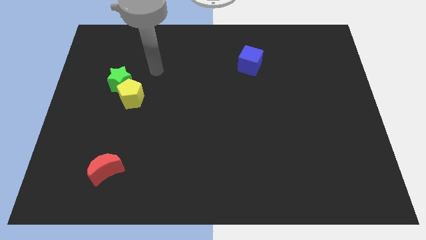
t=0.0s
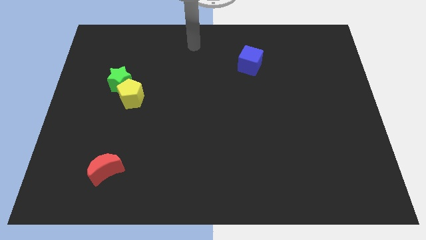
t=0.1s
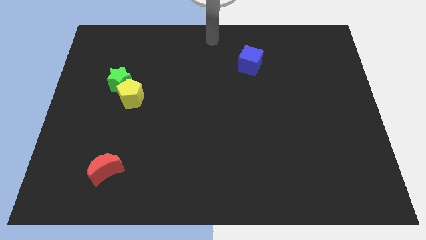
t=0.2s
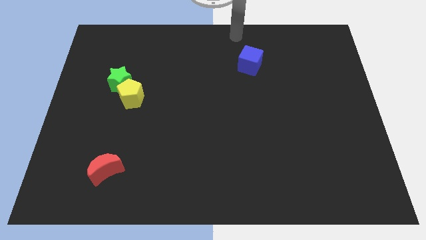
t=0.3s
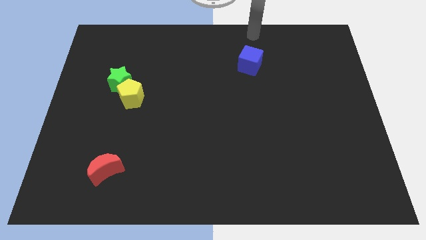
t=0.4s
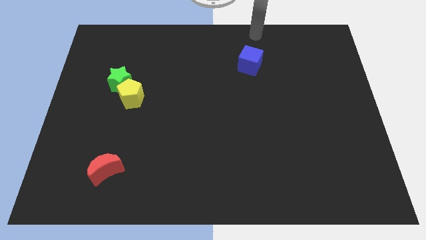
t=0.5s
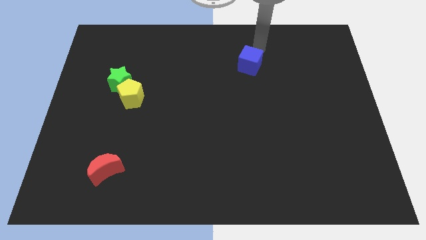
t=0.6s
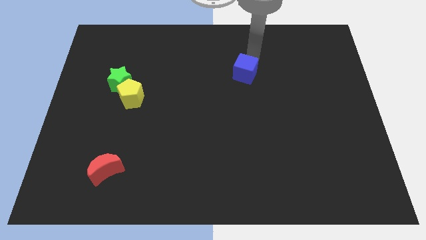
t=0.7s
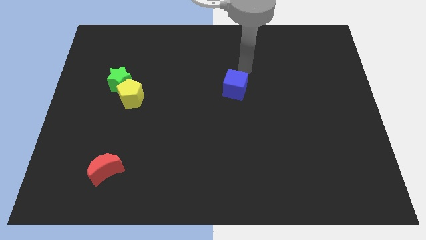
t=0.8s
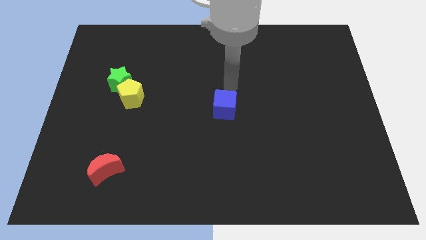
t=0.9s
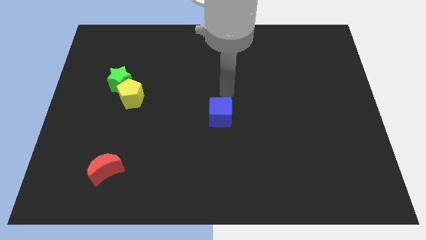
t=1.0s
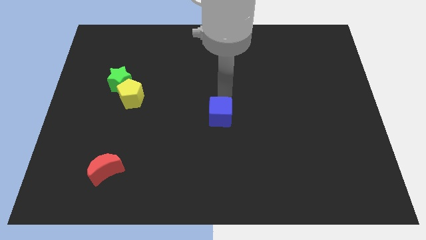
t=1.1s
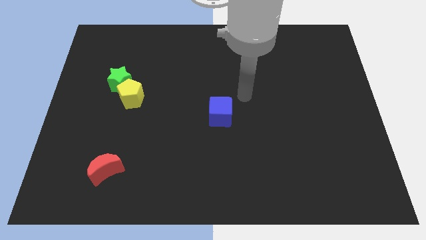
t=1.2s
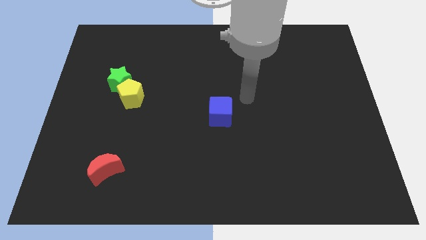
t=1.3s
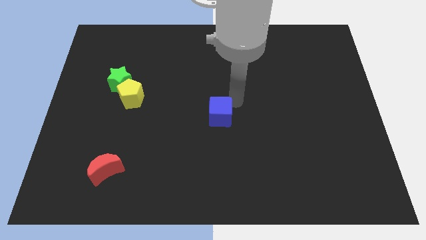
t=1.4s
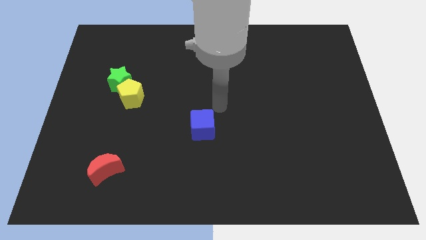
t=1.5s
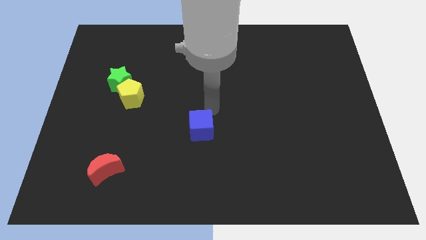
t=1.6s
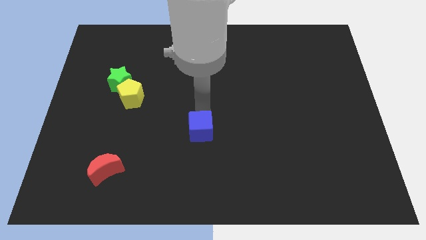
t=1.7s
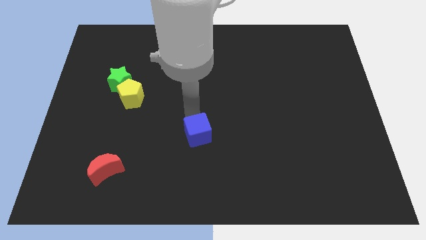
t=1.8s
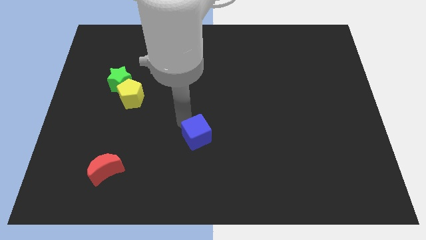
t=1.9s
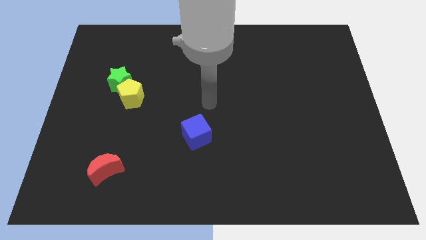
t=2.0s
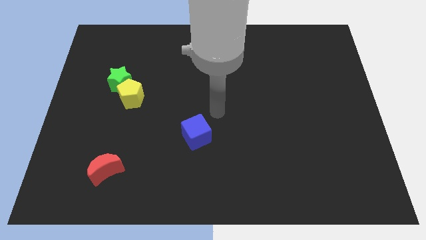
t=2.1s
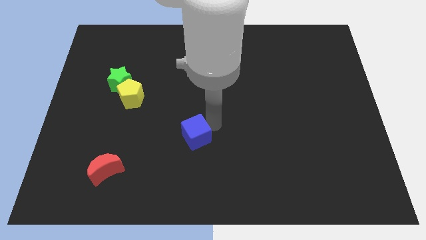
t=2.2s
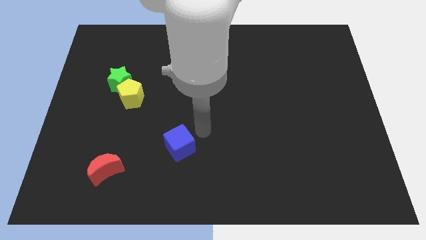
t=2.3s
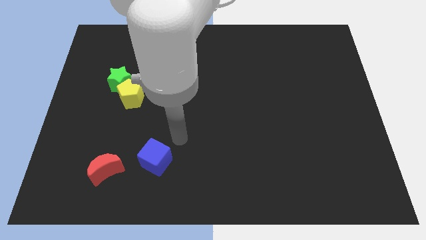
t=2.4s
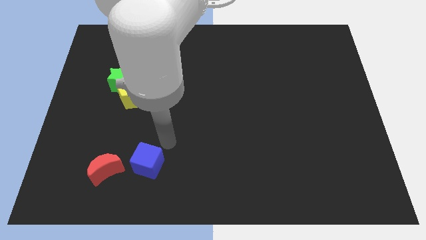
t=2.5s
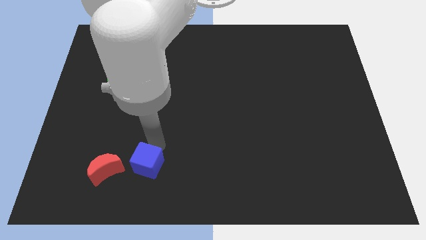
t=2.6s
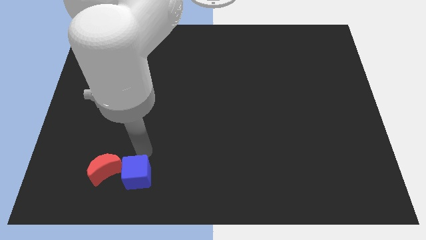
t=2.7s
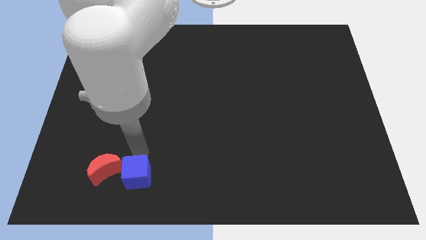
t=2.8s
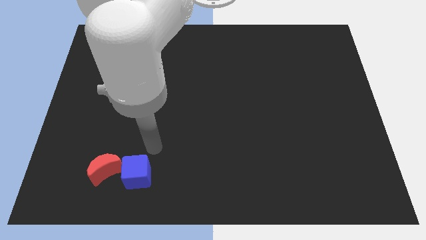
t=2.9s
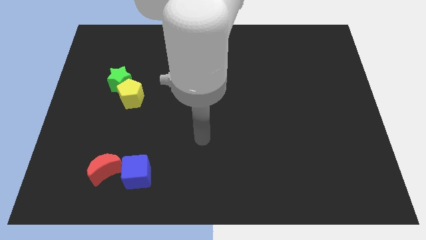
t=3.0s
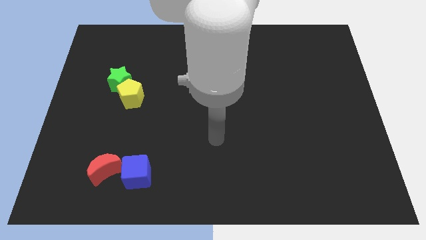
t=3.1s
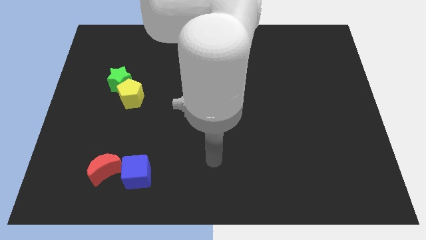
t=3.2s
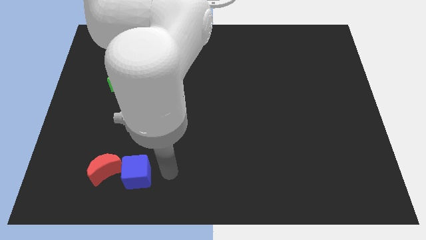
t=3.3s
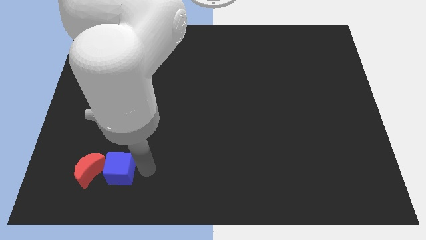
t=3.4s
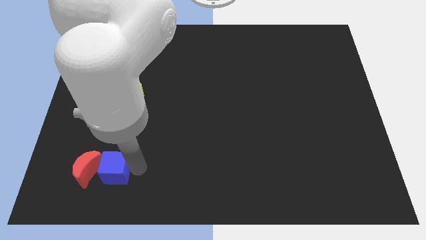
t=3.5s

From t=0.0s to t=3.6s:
put the cube close to the red block

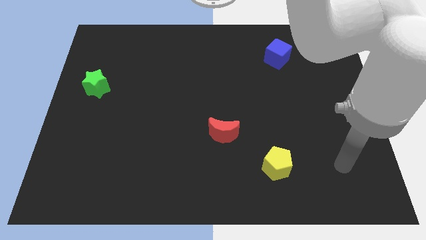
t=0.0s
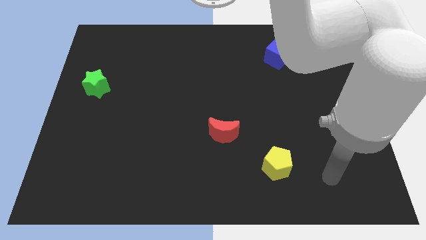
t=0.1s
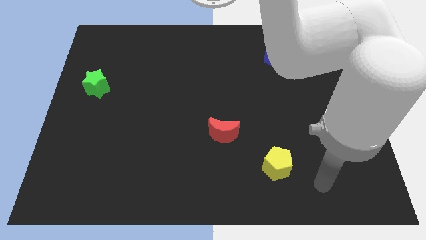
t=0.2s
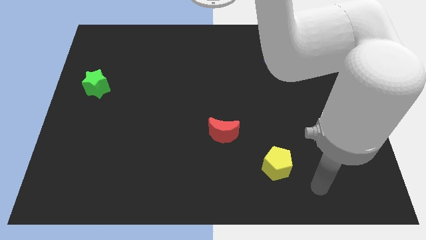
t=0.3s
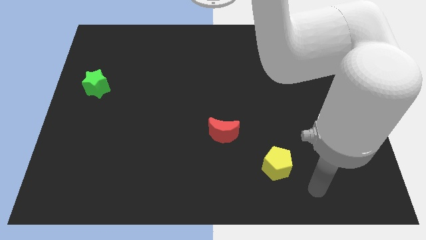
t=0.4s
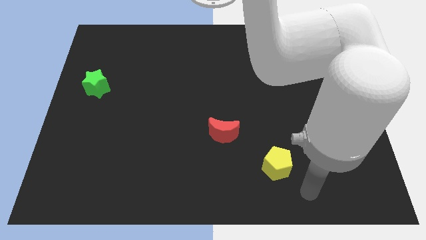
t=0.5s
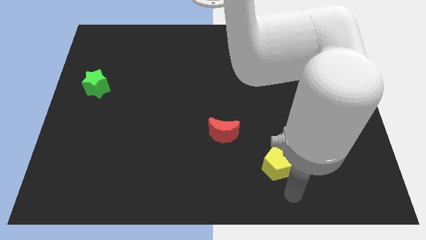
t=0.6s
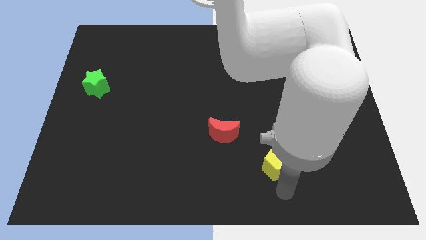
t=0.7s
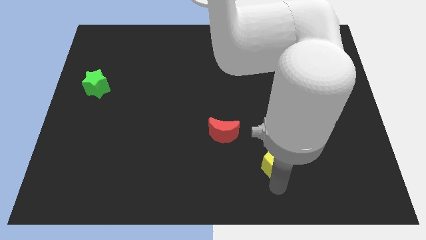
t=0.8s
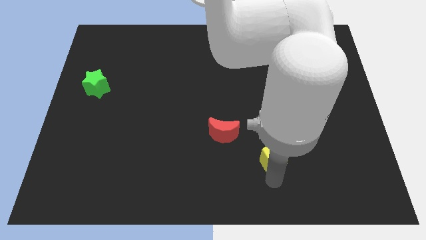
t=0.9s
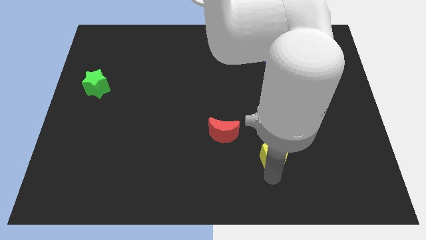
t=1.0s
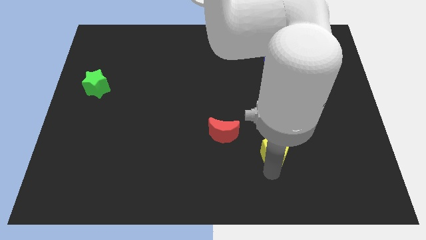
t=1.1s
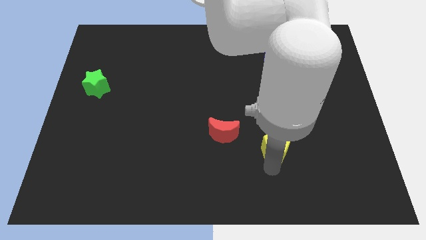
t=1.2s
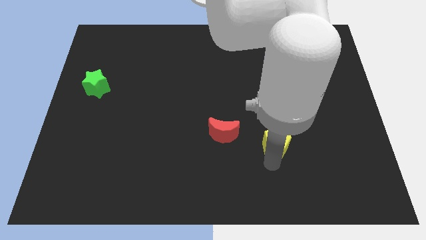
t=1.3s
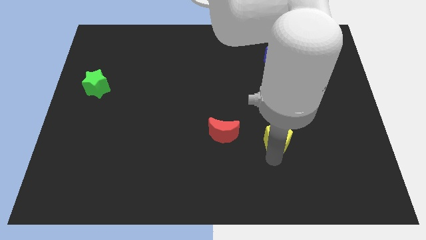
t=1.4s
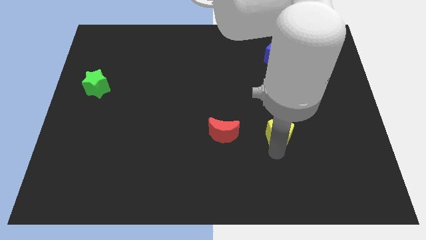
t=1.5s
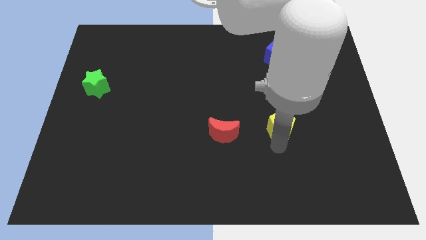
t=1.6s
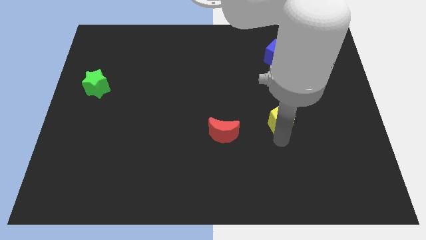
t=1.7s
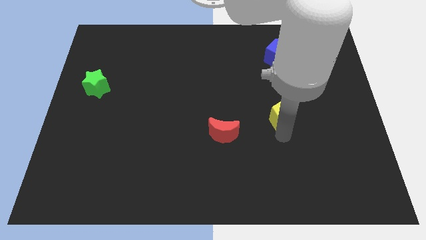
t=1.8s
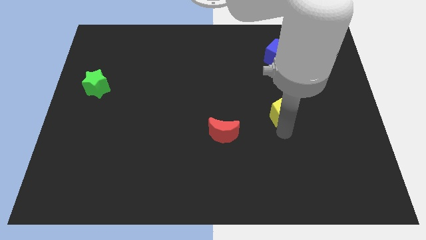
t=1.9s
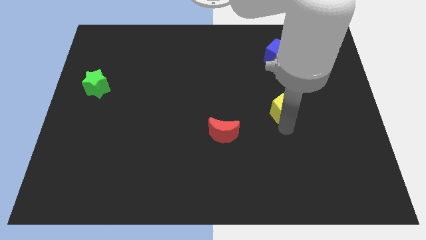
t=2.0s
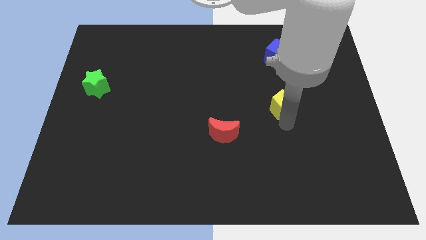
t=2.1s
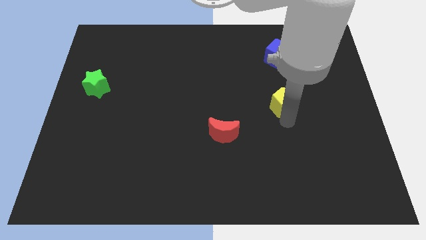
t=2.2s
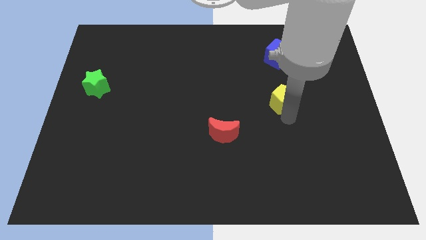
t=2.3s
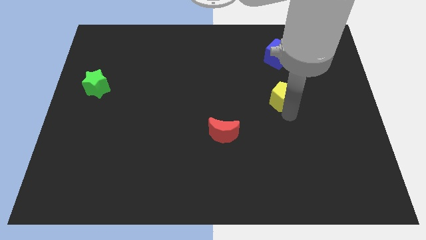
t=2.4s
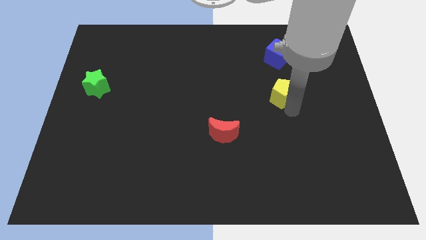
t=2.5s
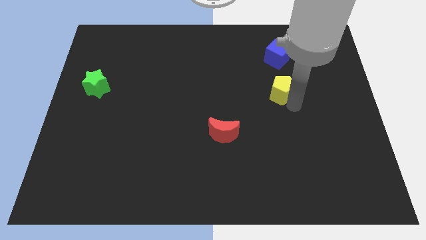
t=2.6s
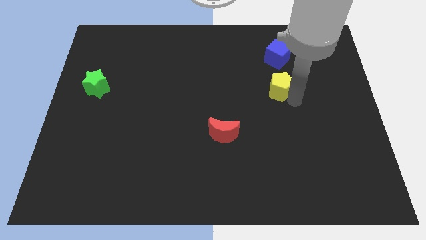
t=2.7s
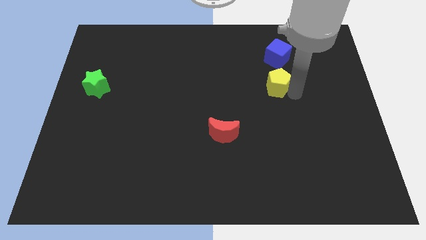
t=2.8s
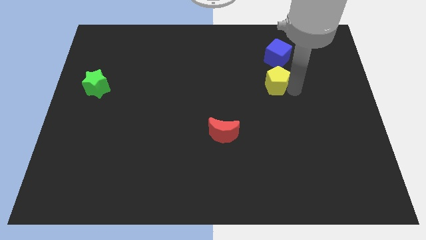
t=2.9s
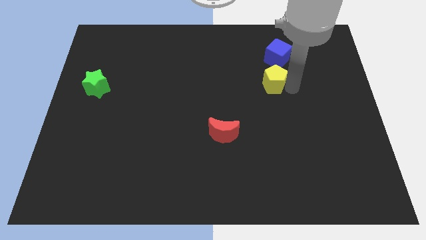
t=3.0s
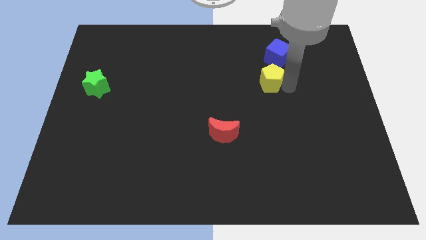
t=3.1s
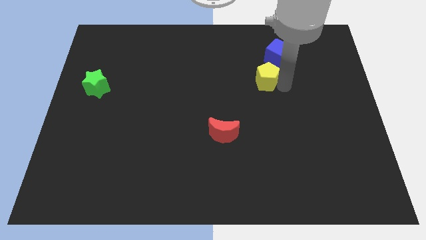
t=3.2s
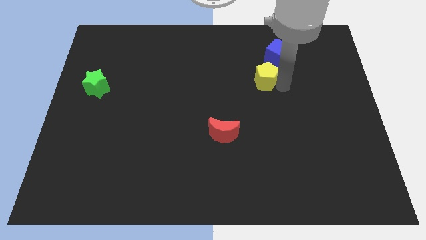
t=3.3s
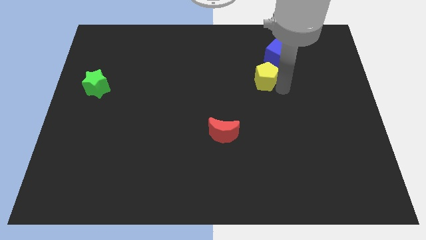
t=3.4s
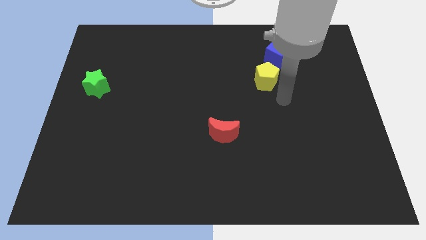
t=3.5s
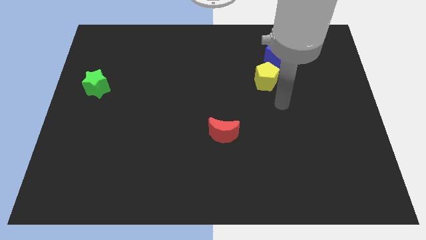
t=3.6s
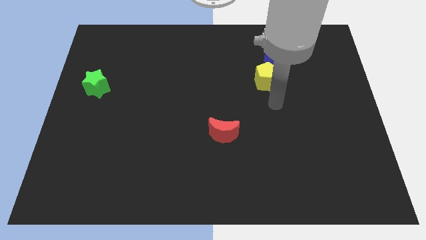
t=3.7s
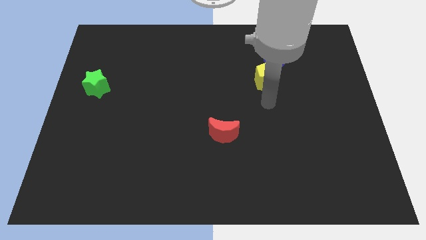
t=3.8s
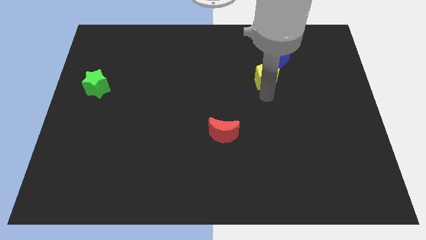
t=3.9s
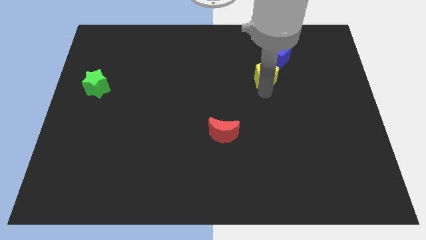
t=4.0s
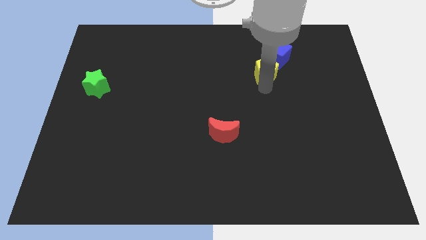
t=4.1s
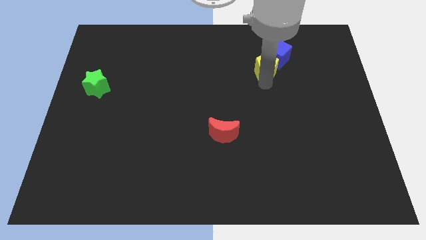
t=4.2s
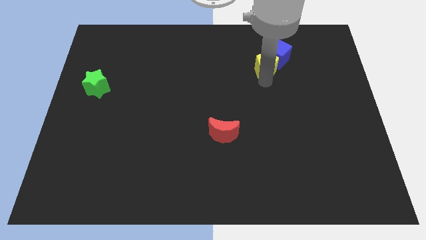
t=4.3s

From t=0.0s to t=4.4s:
move the yellow block next to the blue block

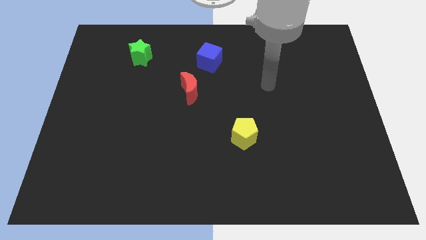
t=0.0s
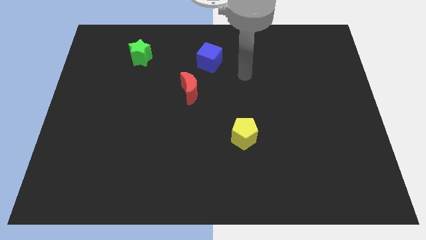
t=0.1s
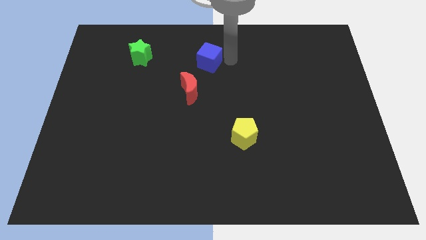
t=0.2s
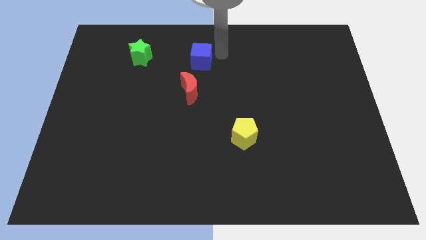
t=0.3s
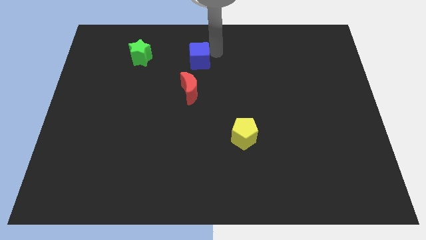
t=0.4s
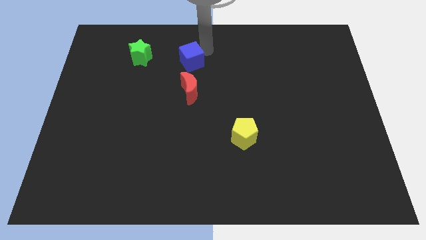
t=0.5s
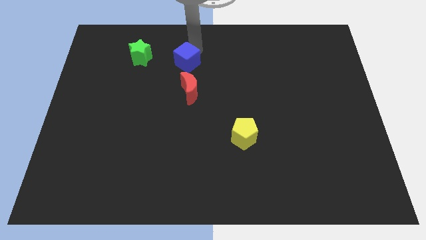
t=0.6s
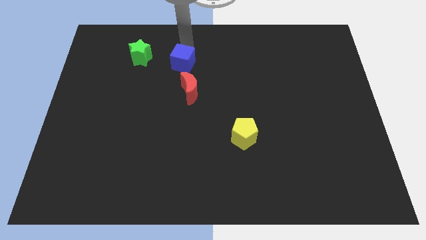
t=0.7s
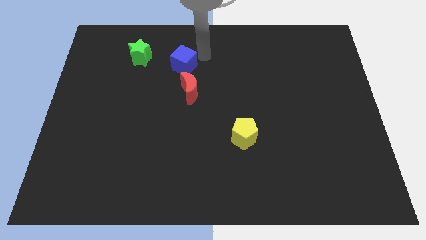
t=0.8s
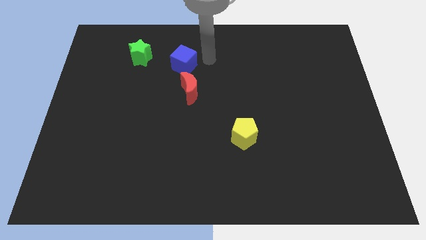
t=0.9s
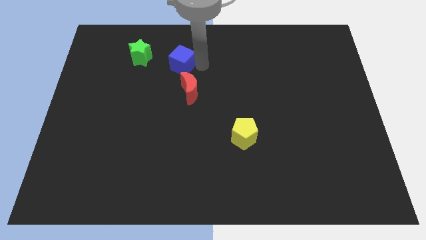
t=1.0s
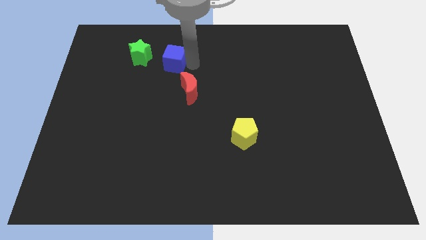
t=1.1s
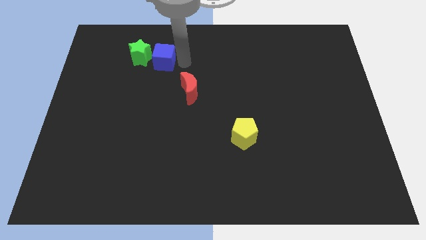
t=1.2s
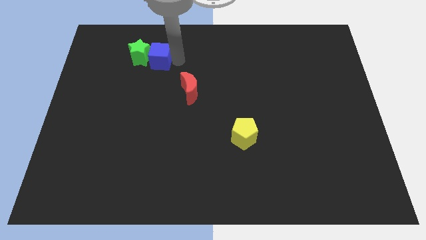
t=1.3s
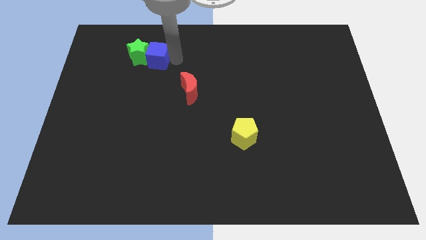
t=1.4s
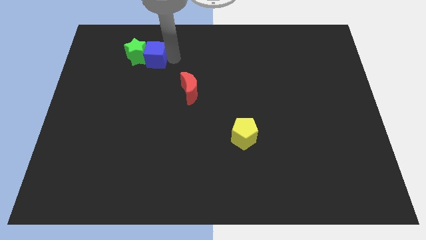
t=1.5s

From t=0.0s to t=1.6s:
put the blue block towards the green star
